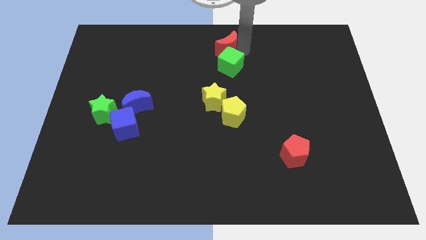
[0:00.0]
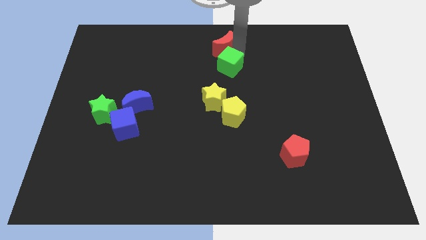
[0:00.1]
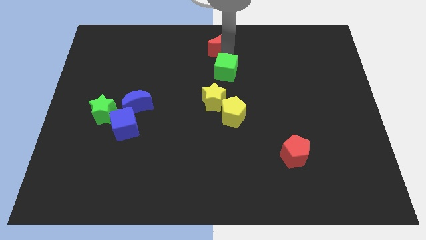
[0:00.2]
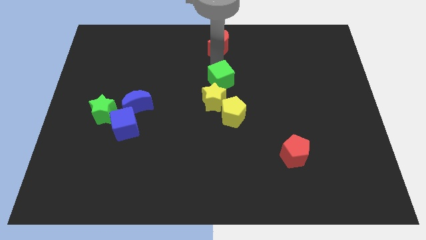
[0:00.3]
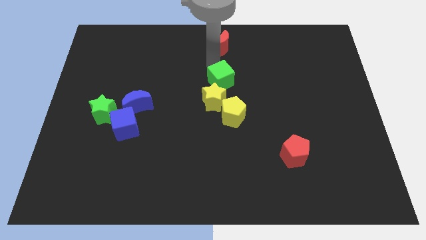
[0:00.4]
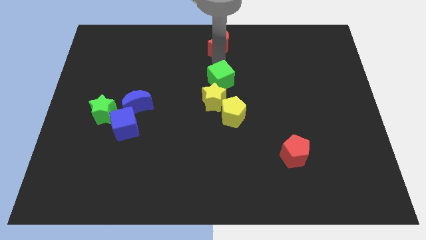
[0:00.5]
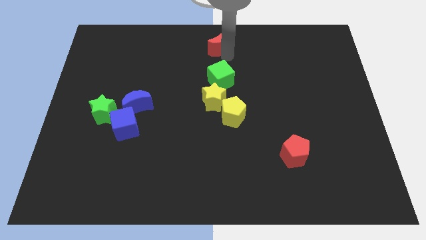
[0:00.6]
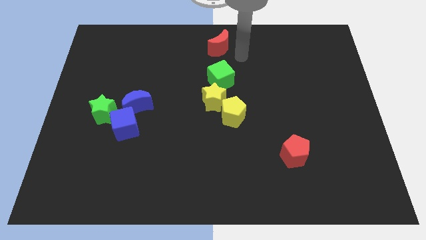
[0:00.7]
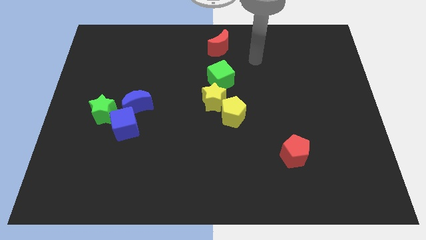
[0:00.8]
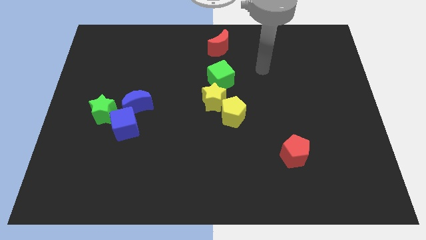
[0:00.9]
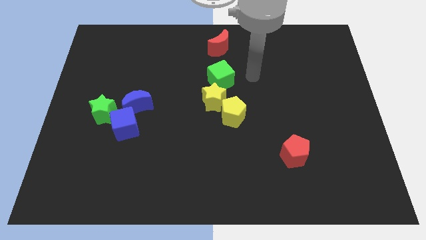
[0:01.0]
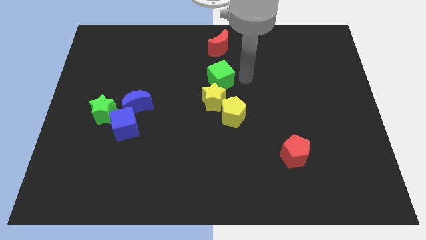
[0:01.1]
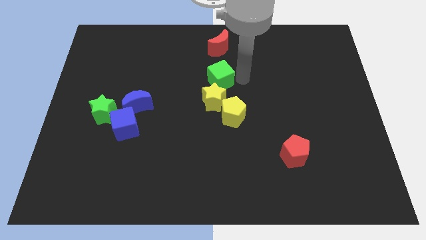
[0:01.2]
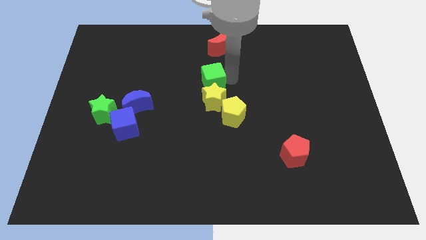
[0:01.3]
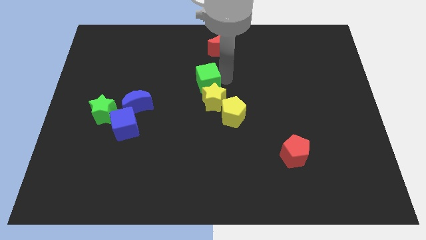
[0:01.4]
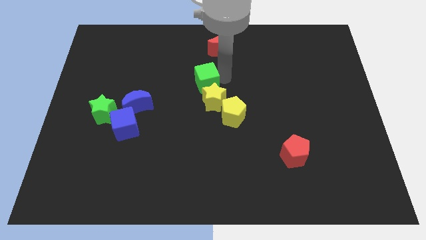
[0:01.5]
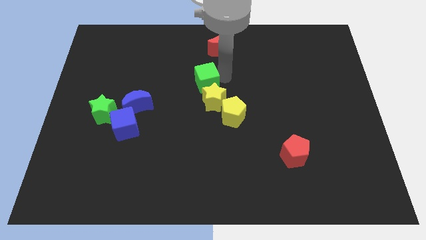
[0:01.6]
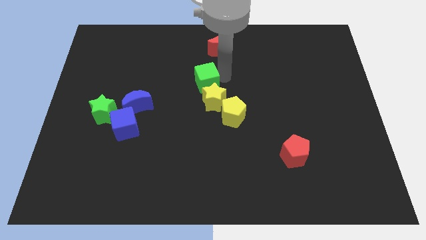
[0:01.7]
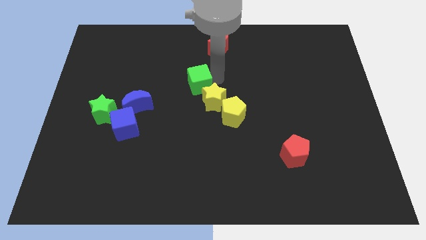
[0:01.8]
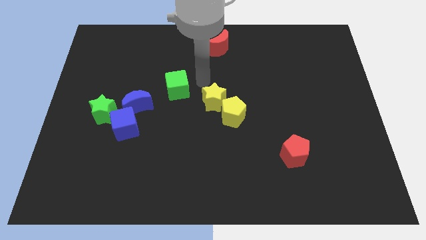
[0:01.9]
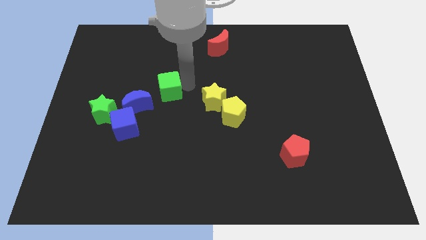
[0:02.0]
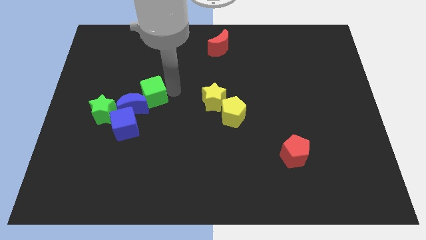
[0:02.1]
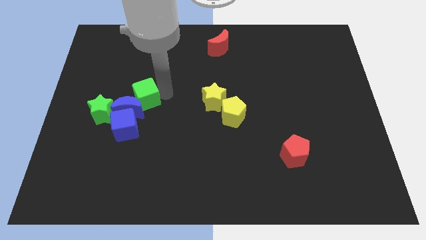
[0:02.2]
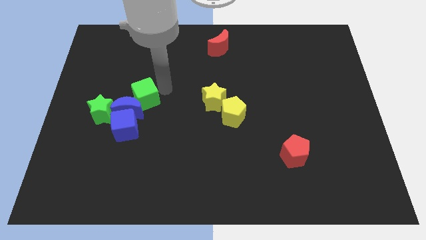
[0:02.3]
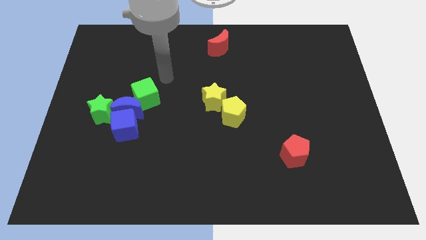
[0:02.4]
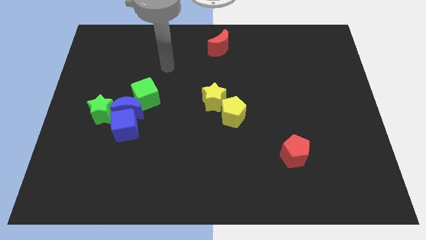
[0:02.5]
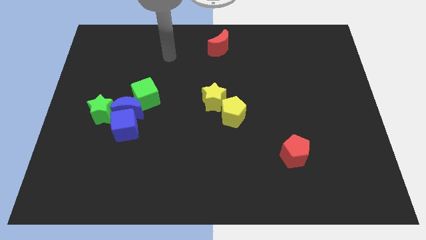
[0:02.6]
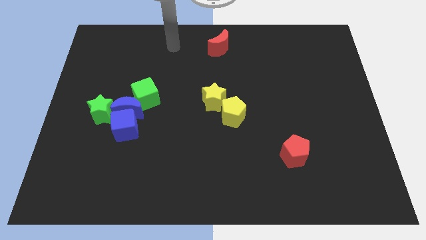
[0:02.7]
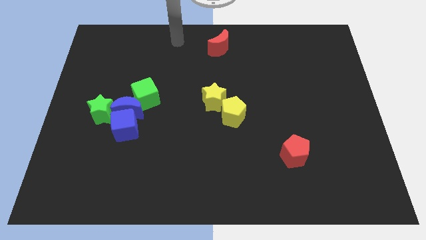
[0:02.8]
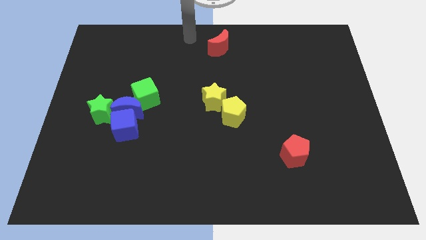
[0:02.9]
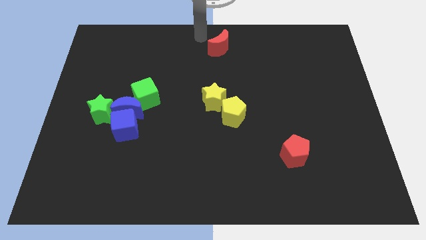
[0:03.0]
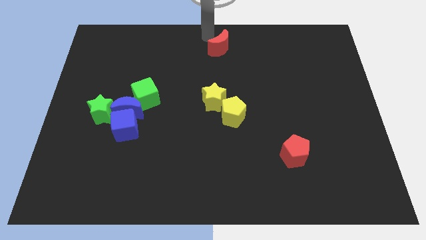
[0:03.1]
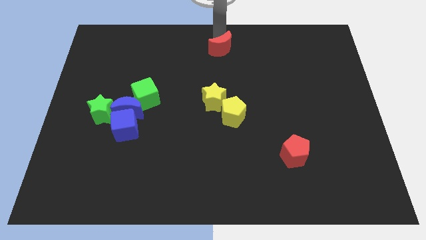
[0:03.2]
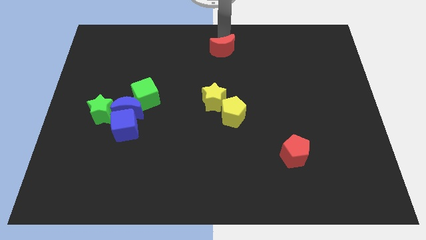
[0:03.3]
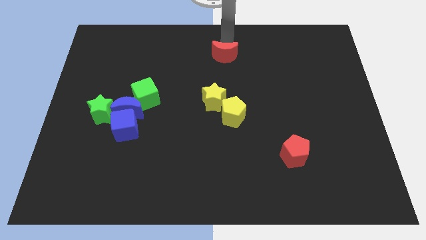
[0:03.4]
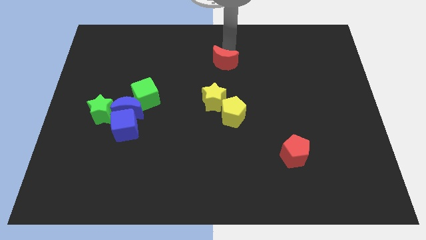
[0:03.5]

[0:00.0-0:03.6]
push the green cube into the blue moon

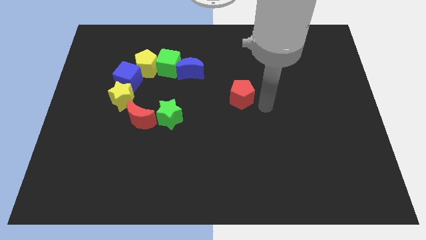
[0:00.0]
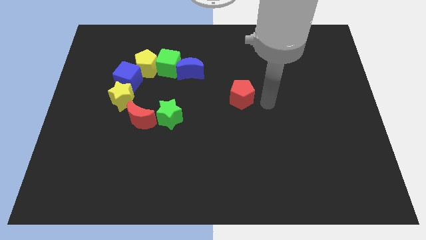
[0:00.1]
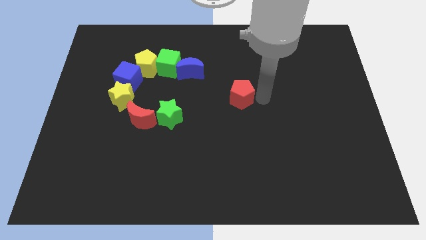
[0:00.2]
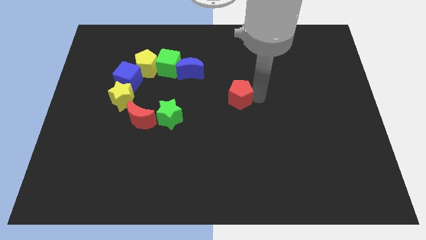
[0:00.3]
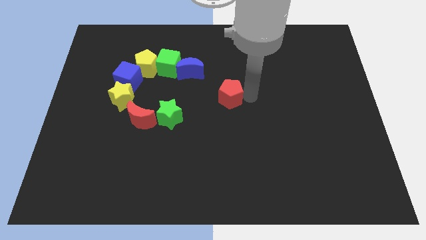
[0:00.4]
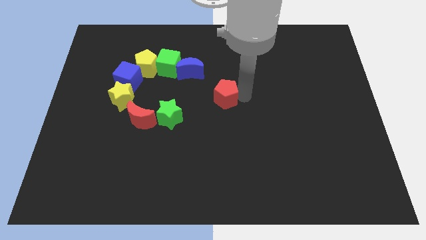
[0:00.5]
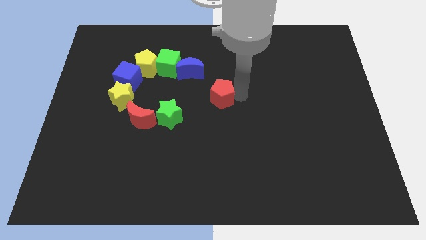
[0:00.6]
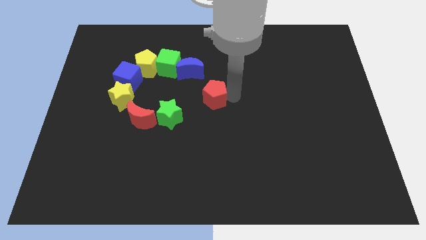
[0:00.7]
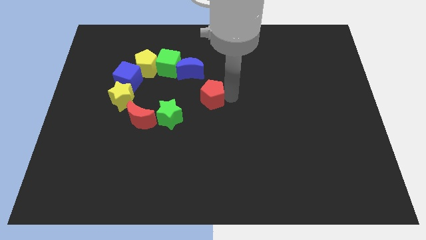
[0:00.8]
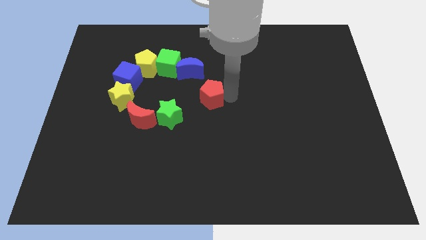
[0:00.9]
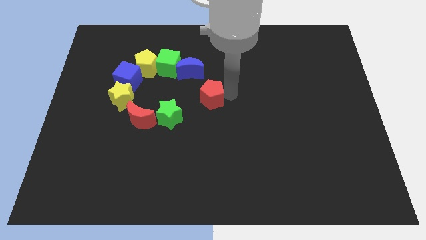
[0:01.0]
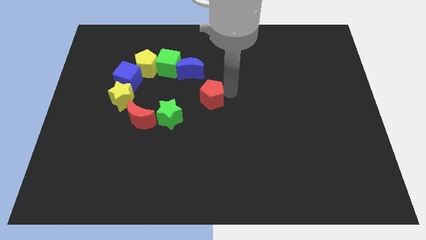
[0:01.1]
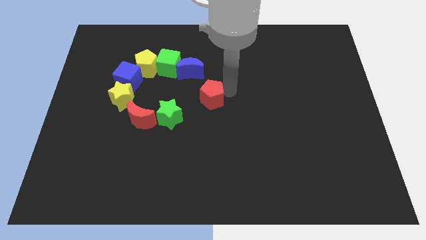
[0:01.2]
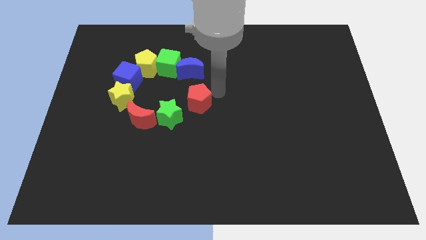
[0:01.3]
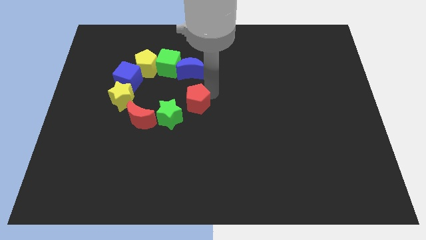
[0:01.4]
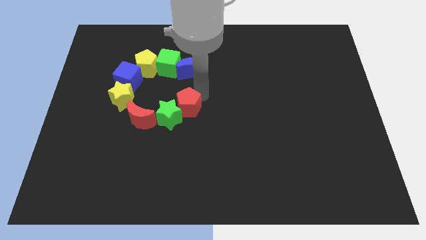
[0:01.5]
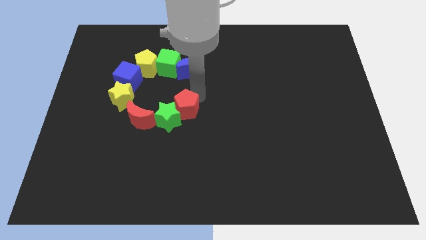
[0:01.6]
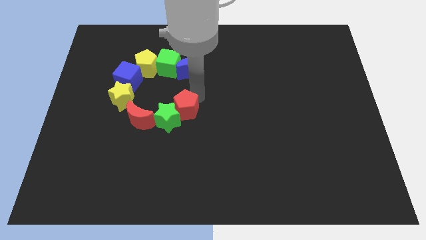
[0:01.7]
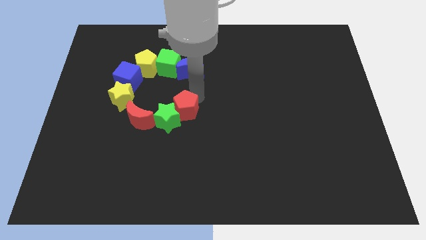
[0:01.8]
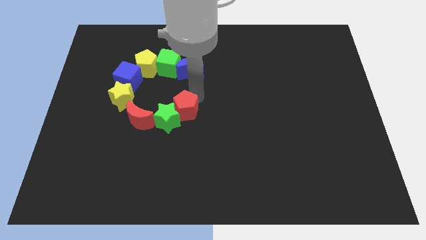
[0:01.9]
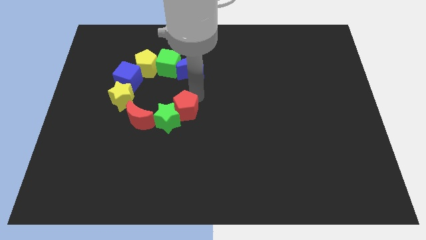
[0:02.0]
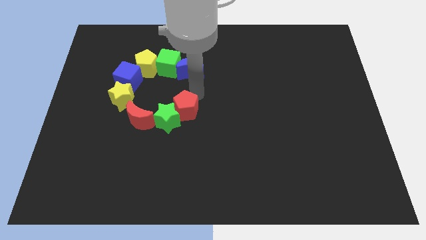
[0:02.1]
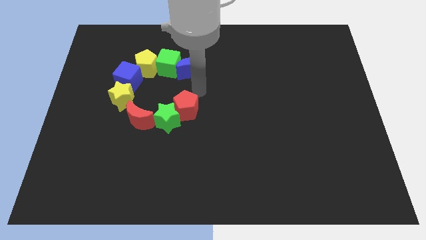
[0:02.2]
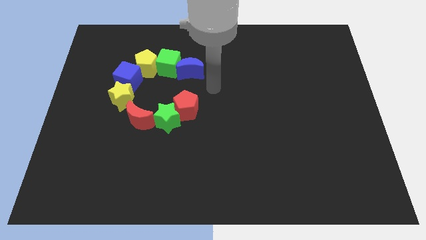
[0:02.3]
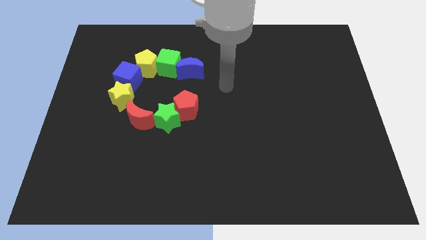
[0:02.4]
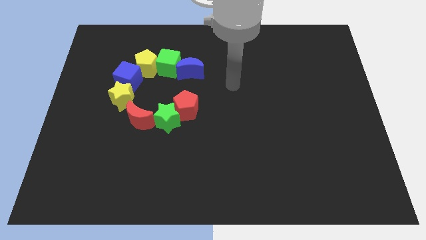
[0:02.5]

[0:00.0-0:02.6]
move the red pentagon diagonally to the top right of the green cube

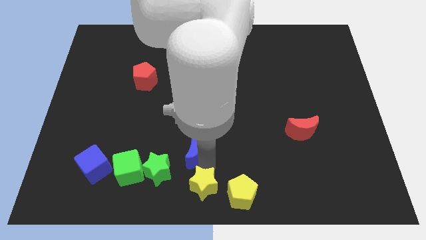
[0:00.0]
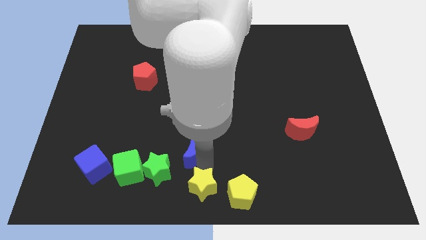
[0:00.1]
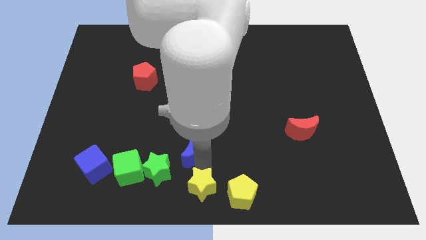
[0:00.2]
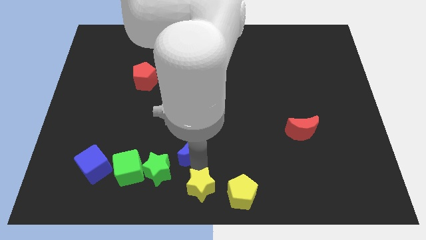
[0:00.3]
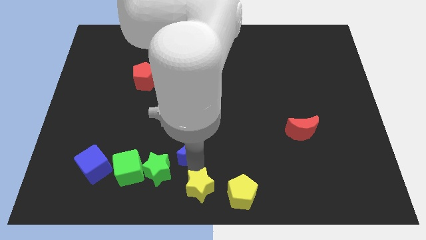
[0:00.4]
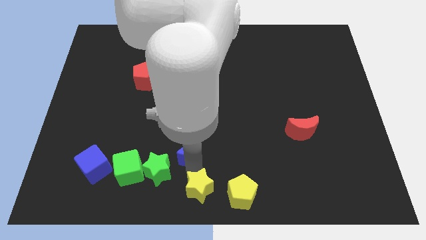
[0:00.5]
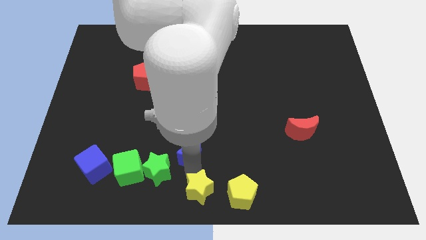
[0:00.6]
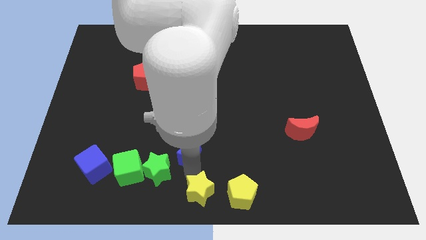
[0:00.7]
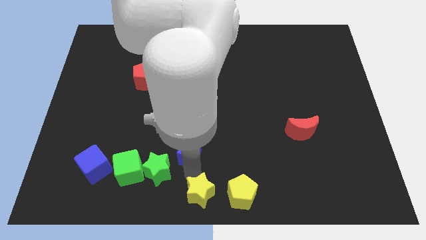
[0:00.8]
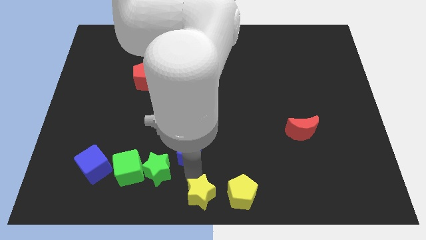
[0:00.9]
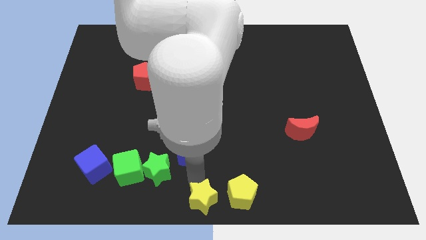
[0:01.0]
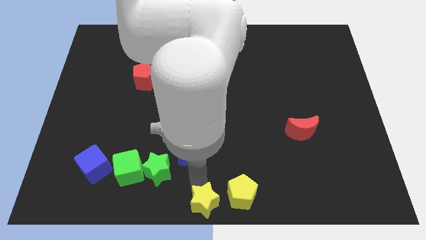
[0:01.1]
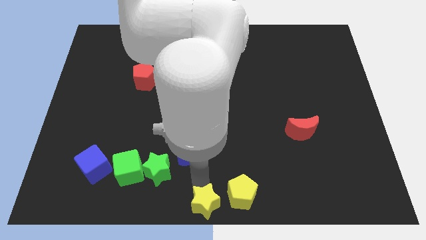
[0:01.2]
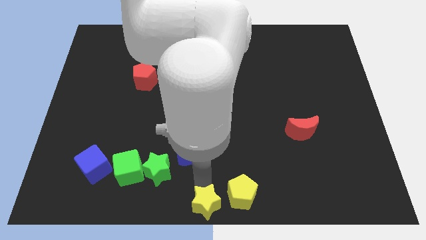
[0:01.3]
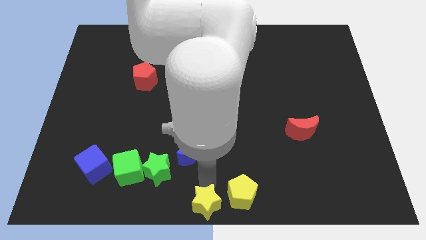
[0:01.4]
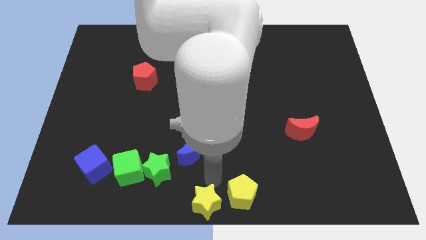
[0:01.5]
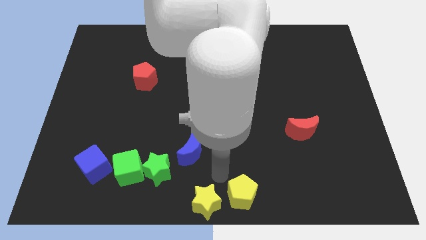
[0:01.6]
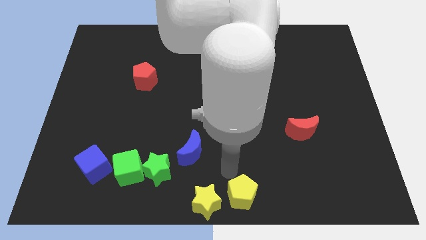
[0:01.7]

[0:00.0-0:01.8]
put the yellow star at the bottom center of the board

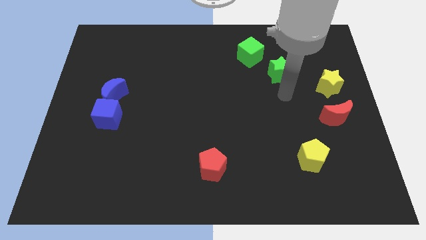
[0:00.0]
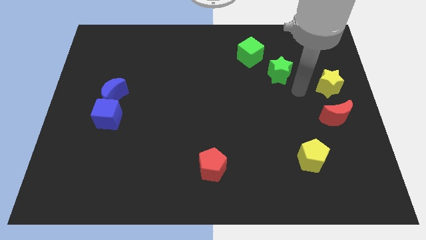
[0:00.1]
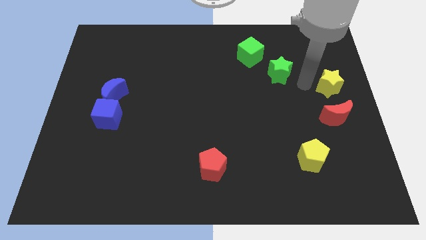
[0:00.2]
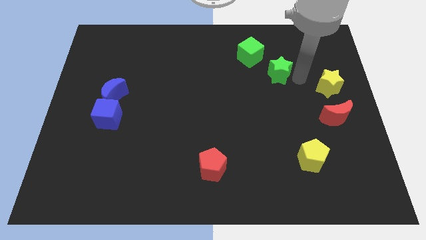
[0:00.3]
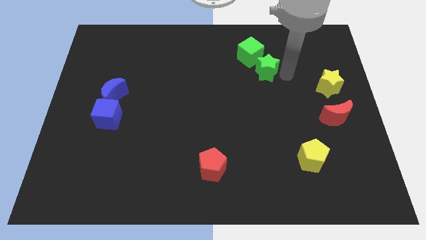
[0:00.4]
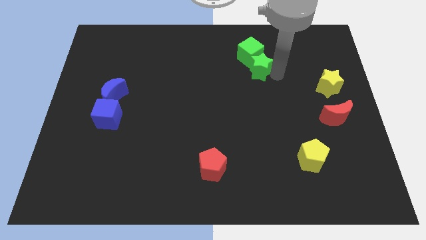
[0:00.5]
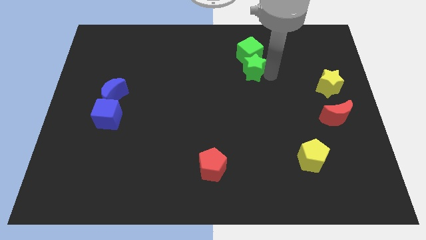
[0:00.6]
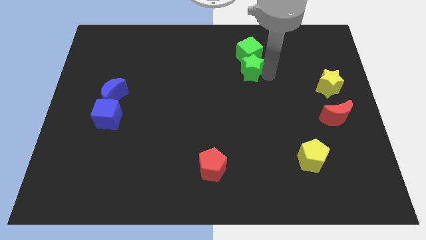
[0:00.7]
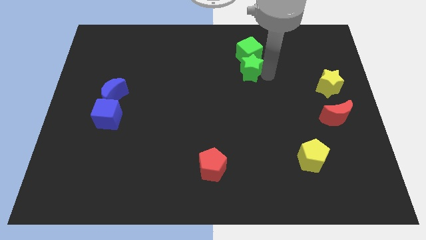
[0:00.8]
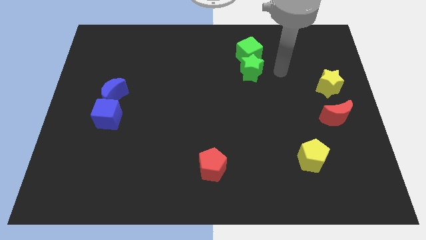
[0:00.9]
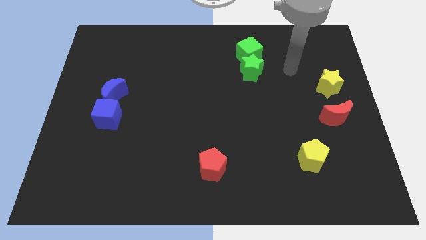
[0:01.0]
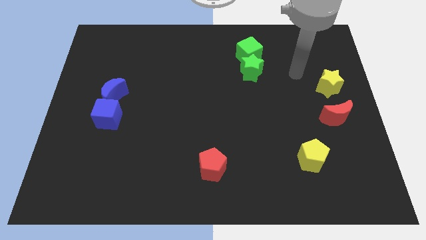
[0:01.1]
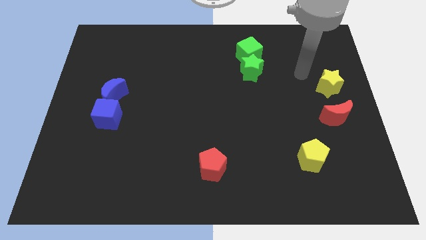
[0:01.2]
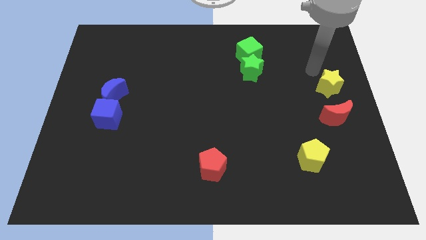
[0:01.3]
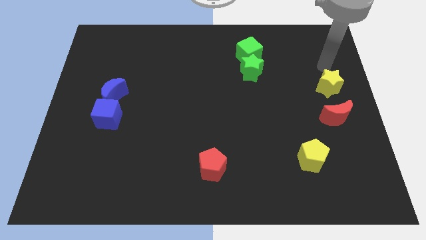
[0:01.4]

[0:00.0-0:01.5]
move the green star into the green cube
